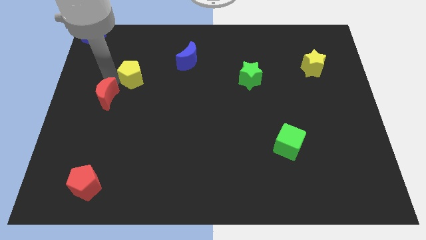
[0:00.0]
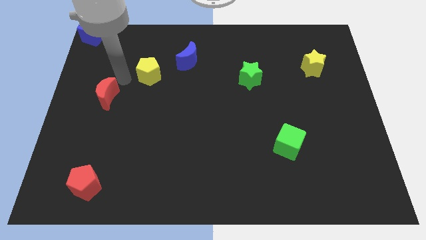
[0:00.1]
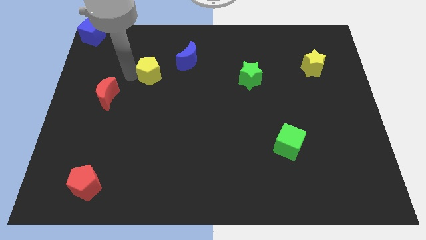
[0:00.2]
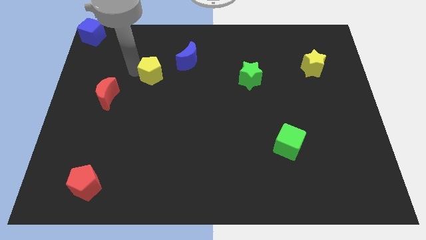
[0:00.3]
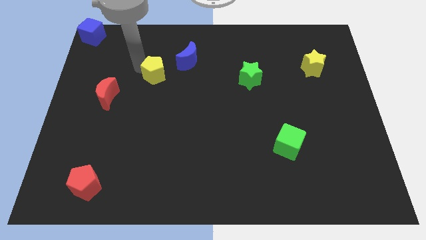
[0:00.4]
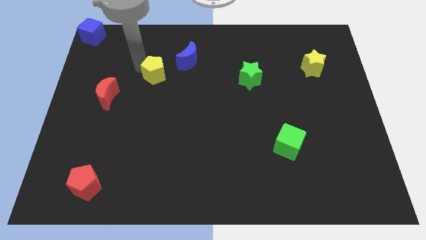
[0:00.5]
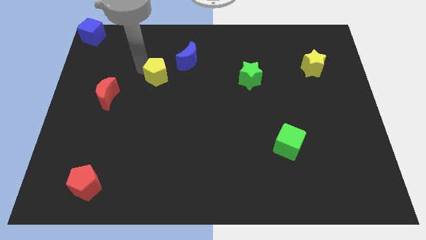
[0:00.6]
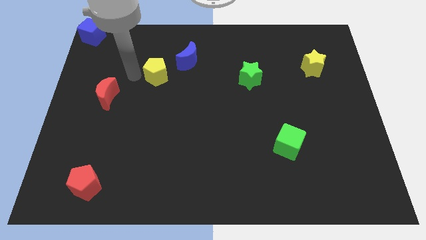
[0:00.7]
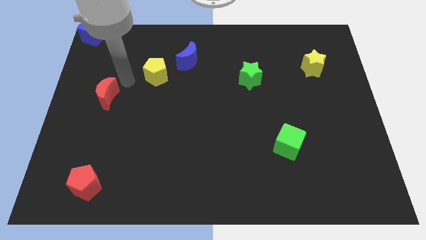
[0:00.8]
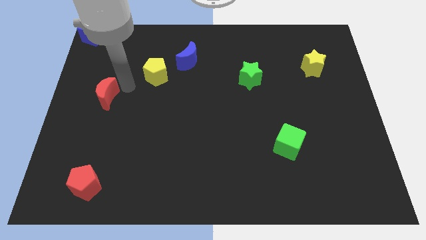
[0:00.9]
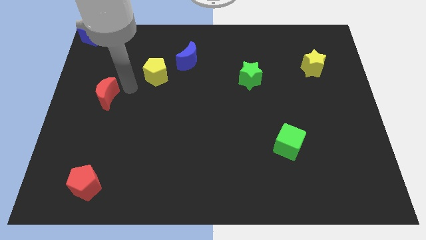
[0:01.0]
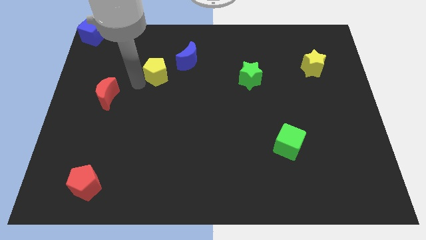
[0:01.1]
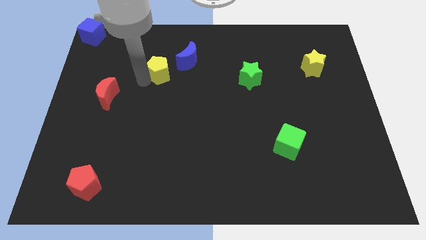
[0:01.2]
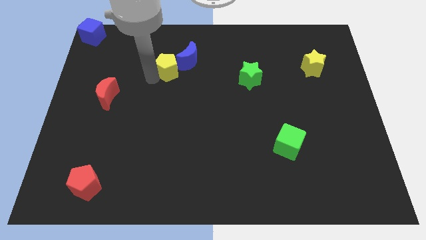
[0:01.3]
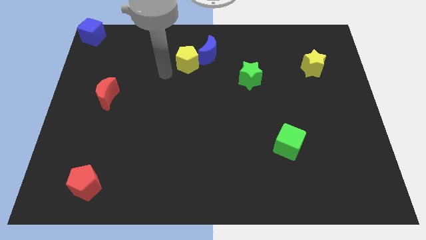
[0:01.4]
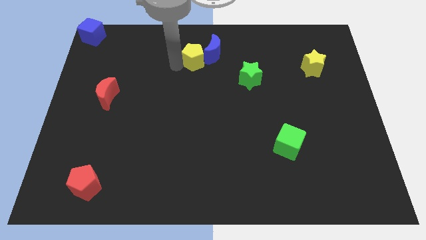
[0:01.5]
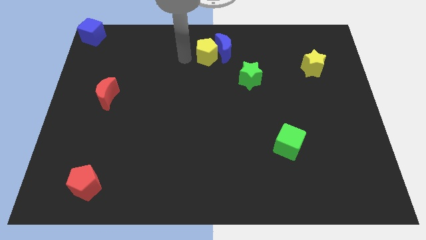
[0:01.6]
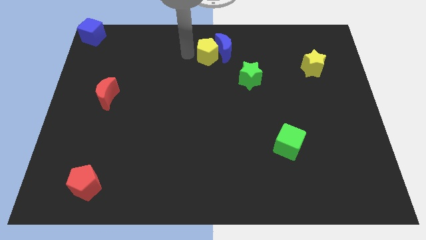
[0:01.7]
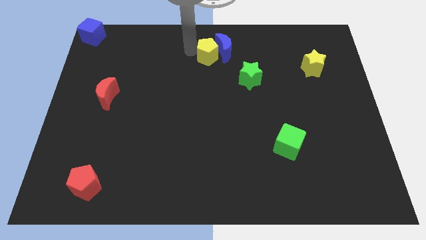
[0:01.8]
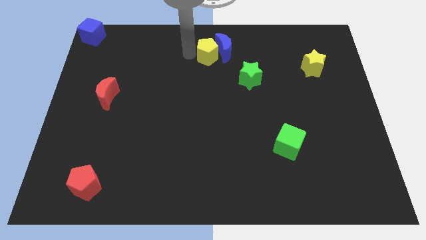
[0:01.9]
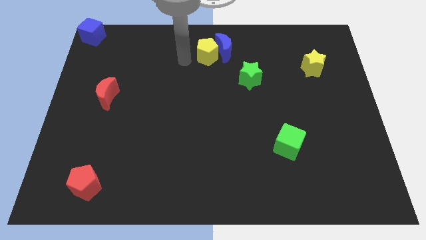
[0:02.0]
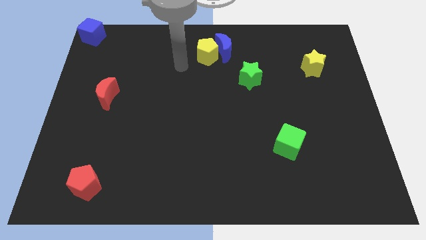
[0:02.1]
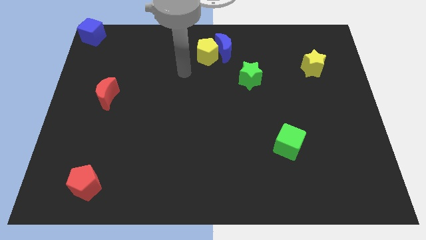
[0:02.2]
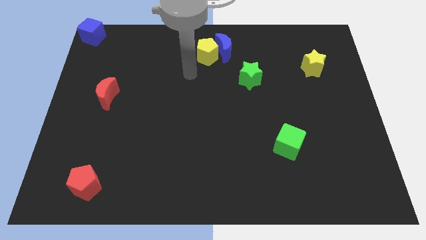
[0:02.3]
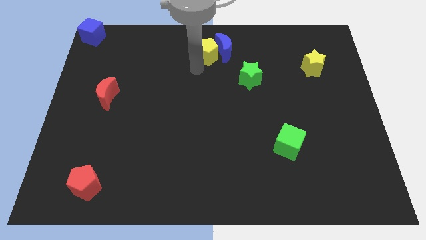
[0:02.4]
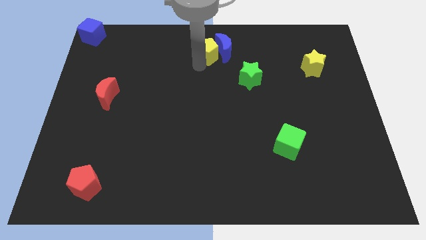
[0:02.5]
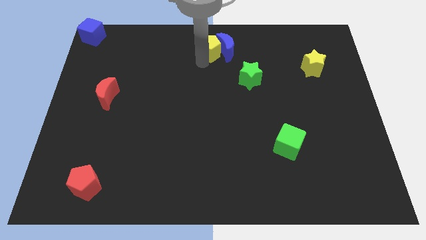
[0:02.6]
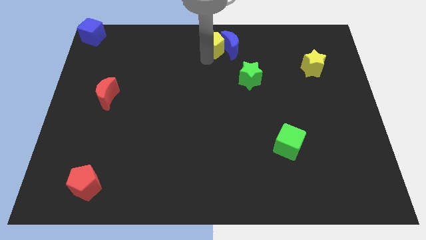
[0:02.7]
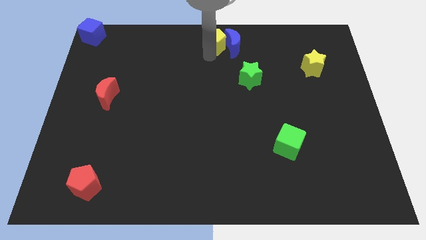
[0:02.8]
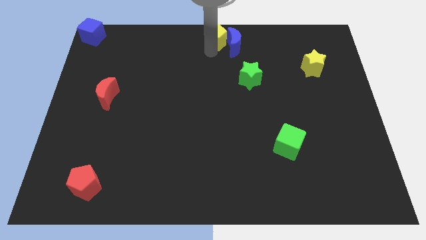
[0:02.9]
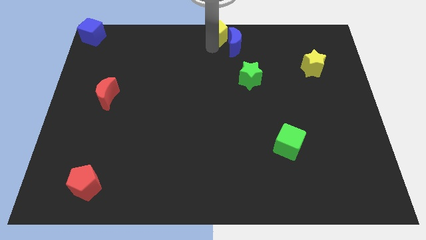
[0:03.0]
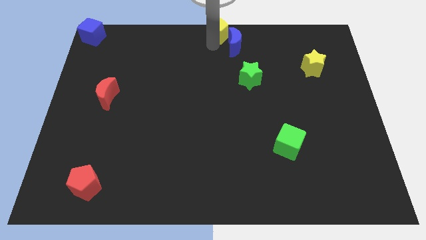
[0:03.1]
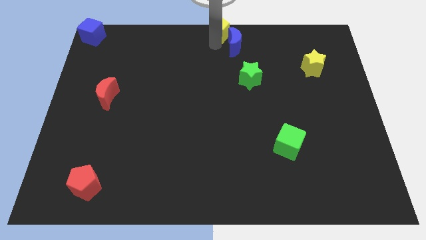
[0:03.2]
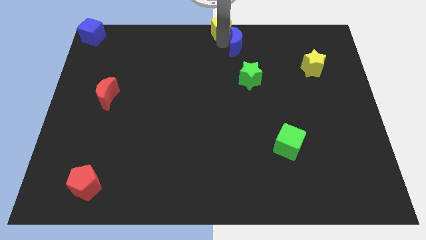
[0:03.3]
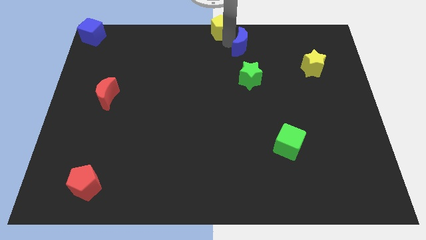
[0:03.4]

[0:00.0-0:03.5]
place the yellow pentagon at the top center of the board

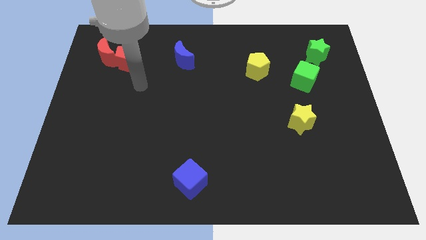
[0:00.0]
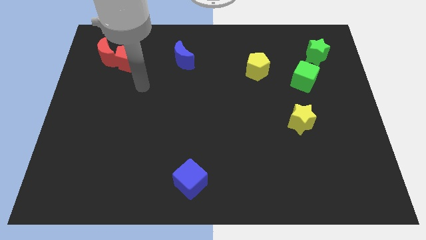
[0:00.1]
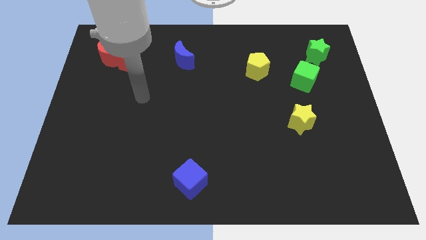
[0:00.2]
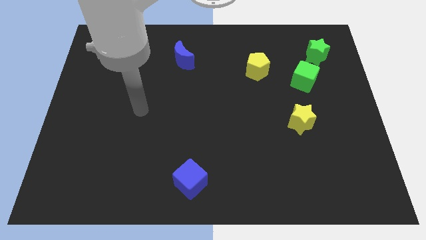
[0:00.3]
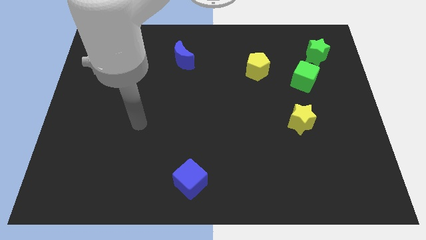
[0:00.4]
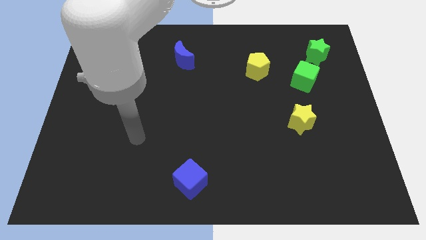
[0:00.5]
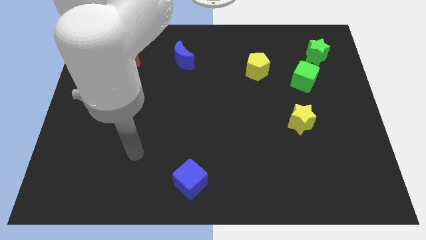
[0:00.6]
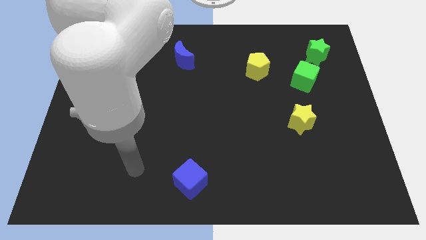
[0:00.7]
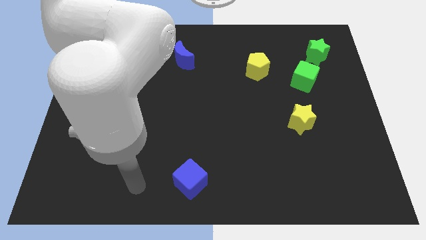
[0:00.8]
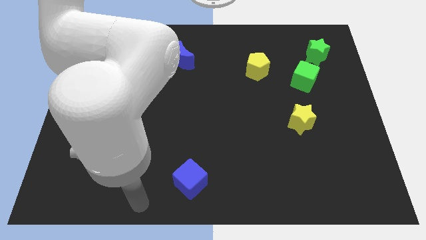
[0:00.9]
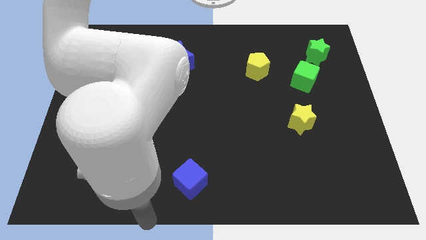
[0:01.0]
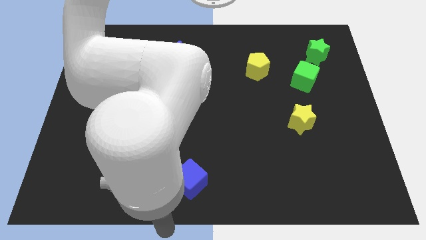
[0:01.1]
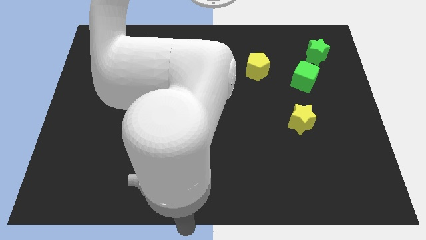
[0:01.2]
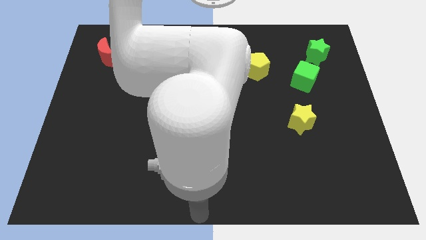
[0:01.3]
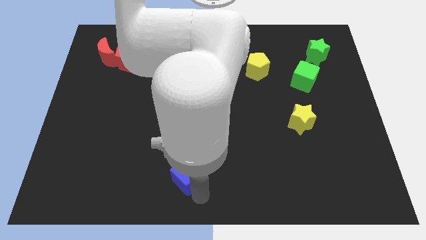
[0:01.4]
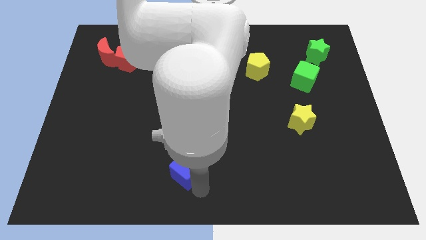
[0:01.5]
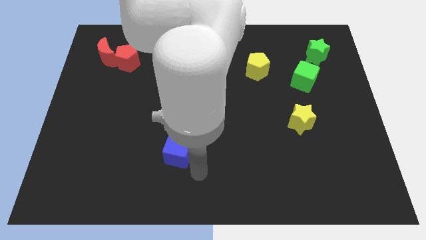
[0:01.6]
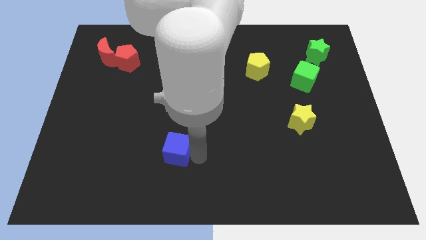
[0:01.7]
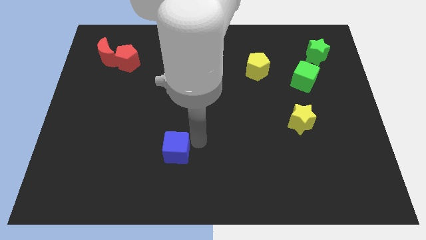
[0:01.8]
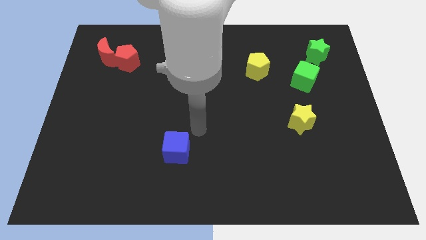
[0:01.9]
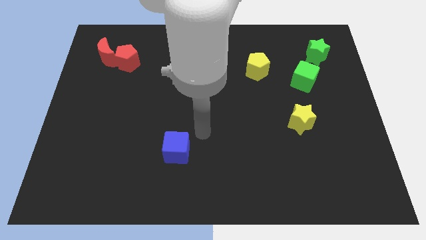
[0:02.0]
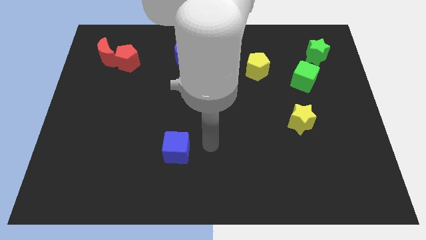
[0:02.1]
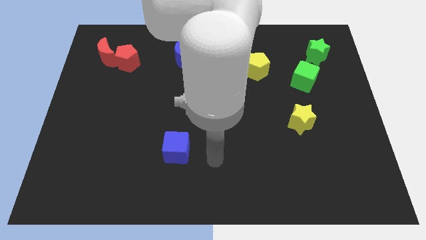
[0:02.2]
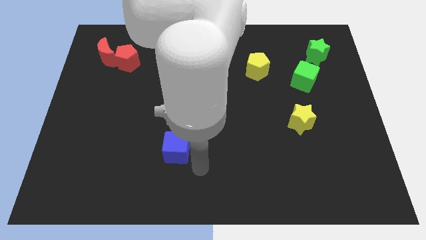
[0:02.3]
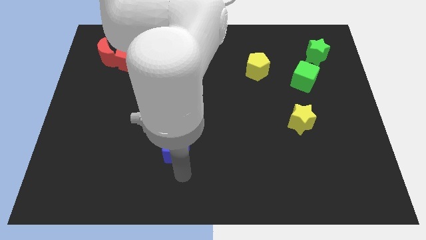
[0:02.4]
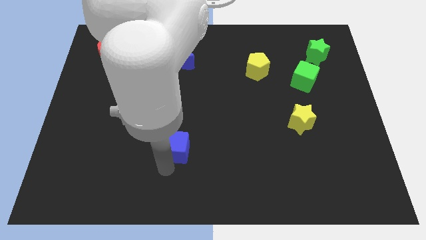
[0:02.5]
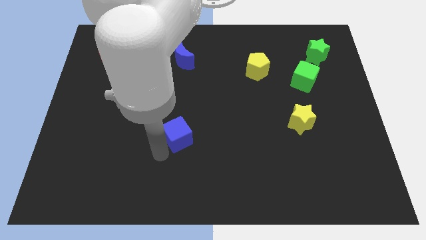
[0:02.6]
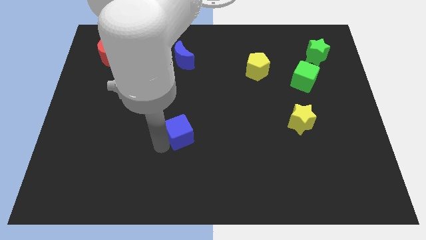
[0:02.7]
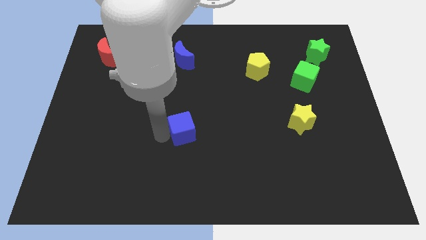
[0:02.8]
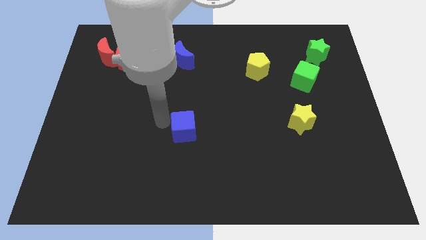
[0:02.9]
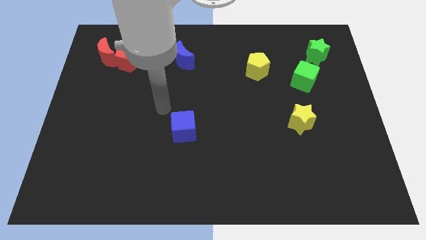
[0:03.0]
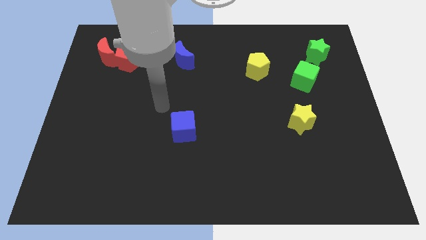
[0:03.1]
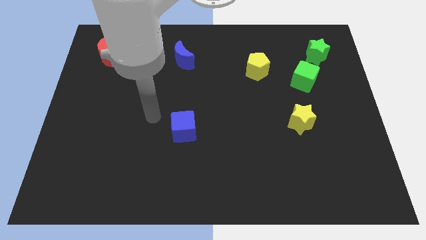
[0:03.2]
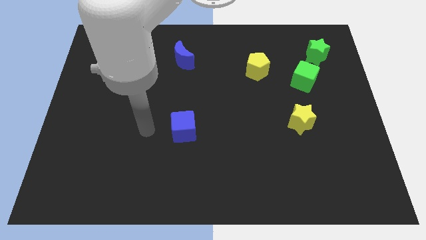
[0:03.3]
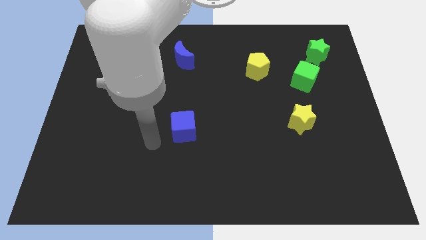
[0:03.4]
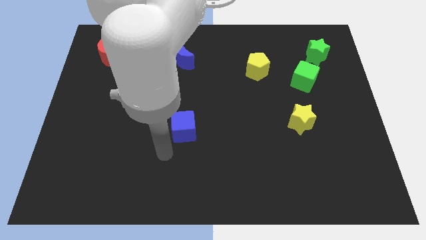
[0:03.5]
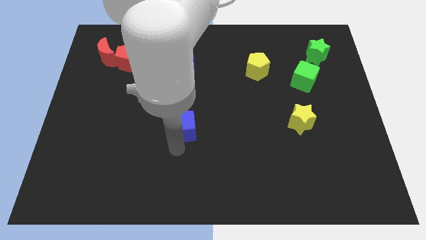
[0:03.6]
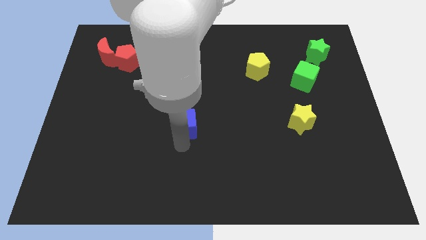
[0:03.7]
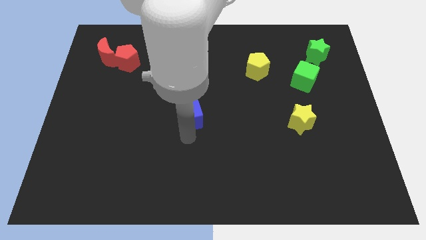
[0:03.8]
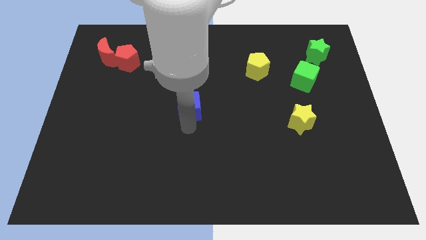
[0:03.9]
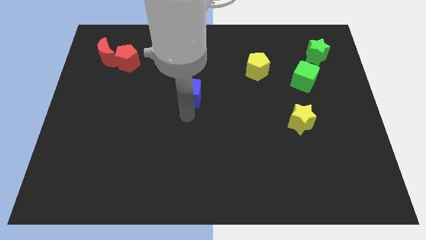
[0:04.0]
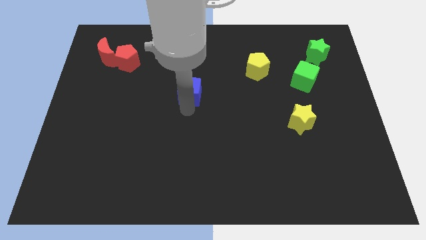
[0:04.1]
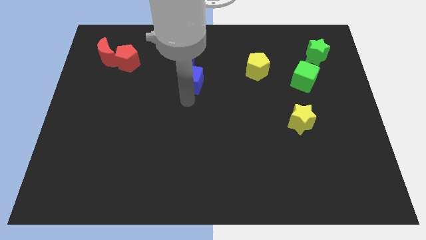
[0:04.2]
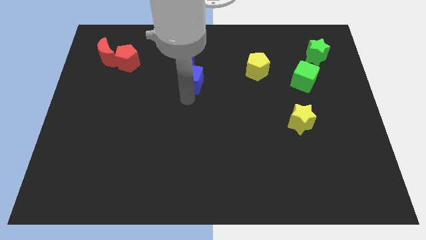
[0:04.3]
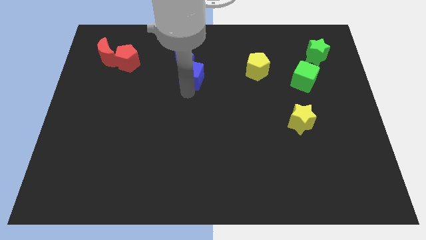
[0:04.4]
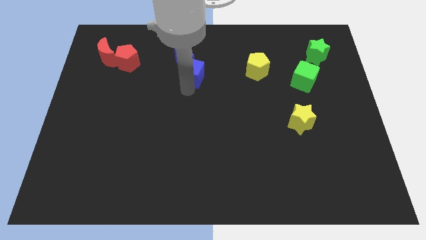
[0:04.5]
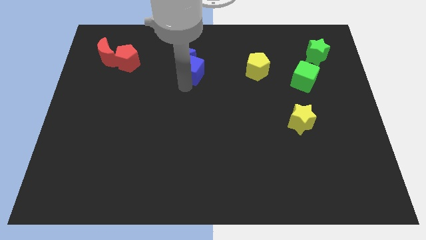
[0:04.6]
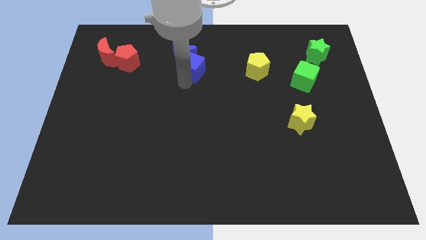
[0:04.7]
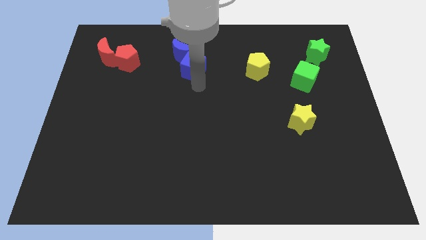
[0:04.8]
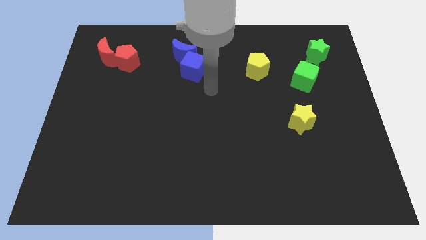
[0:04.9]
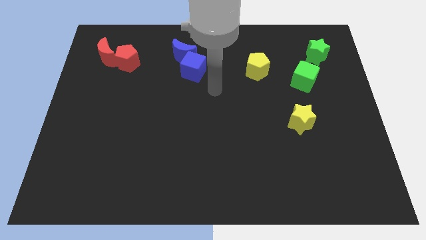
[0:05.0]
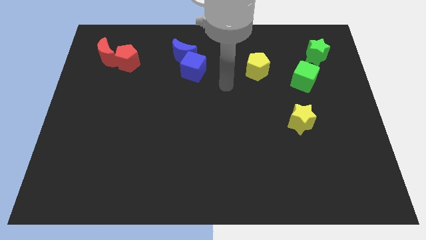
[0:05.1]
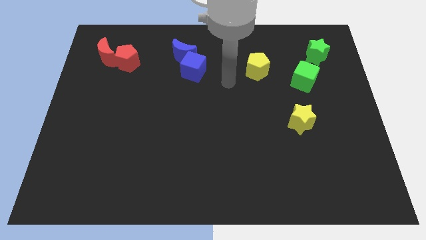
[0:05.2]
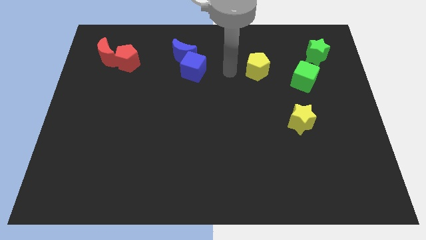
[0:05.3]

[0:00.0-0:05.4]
move the blue cube to the bottom of the blue crescent

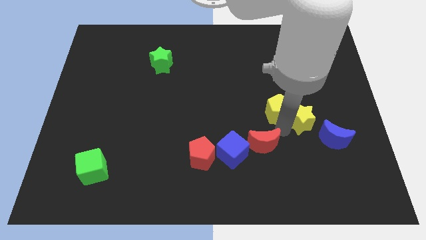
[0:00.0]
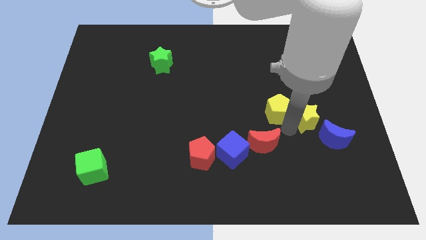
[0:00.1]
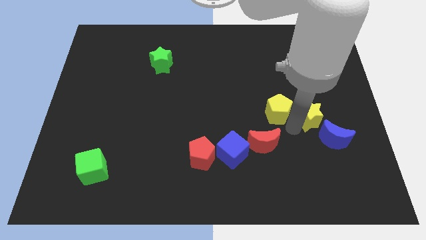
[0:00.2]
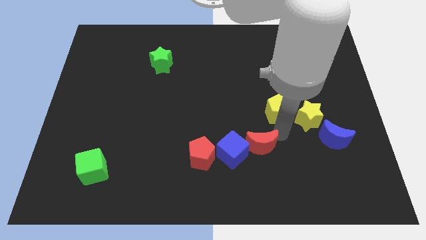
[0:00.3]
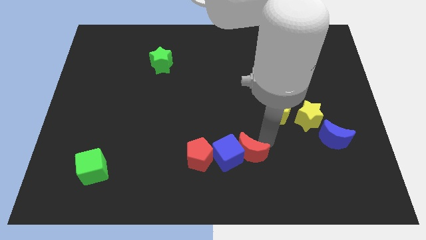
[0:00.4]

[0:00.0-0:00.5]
move your arm away from red pentagon
